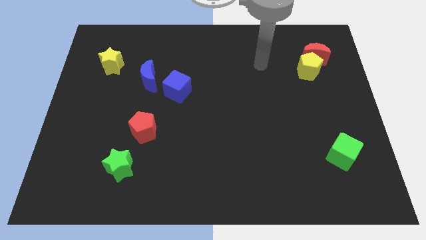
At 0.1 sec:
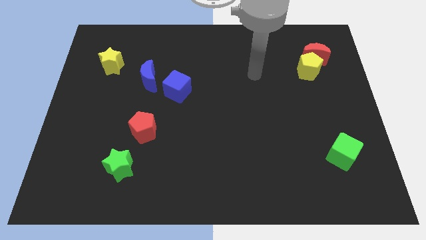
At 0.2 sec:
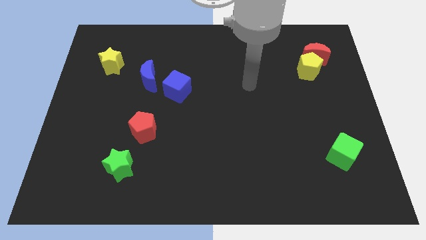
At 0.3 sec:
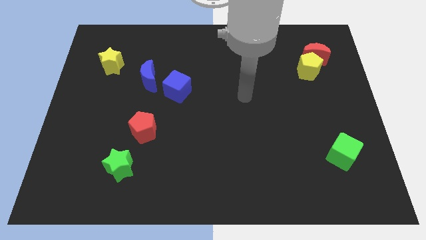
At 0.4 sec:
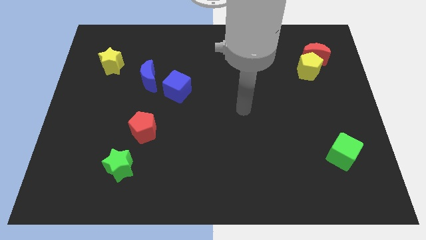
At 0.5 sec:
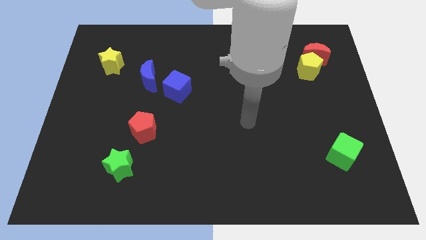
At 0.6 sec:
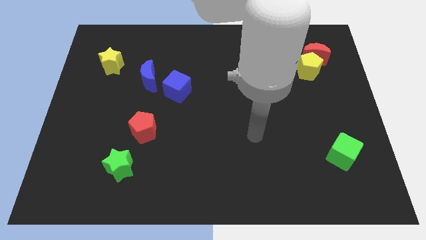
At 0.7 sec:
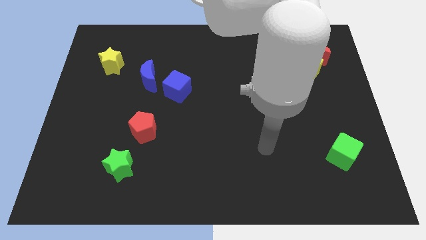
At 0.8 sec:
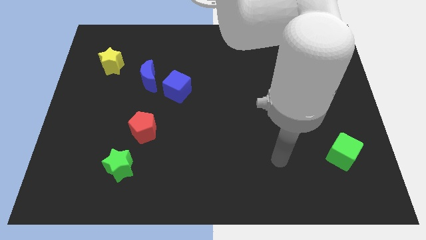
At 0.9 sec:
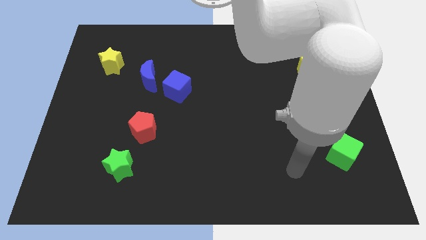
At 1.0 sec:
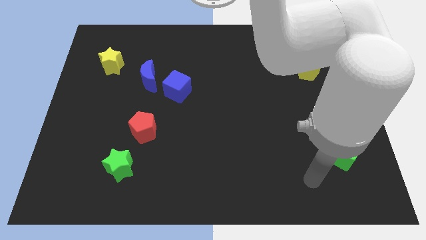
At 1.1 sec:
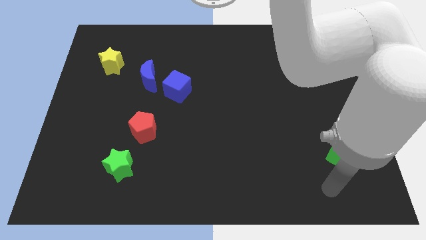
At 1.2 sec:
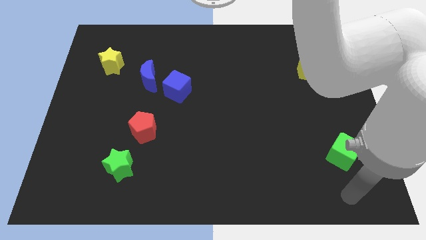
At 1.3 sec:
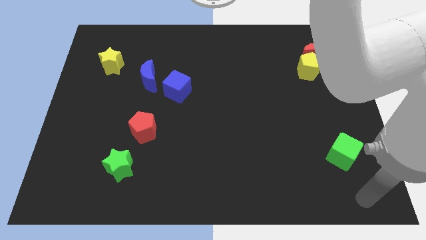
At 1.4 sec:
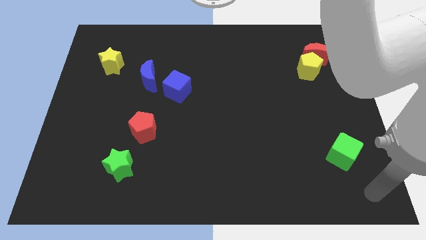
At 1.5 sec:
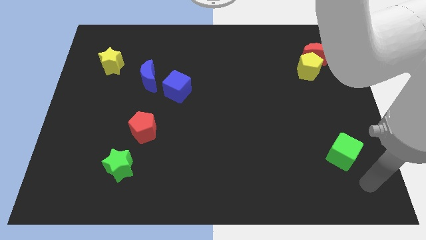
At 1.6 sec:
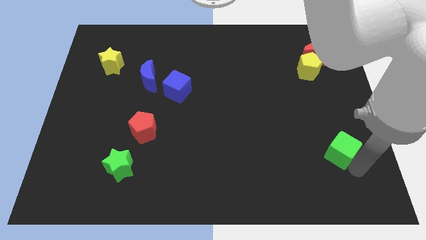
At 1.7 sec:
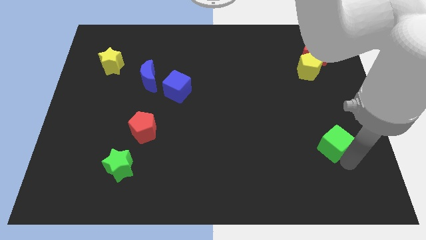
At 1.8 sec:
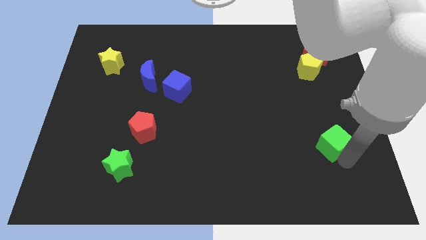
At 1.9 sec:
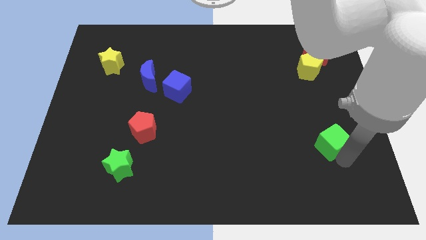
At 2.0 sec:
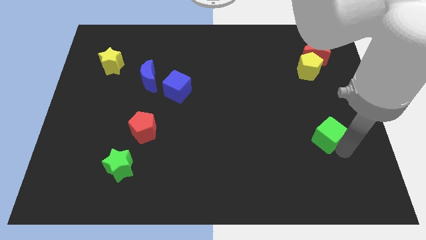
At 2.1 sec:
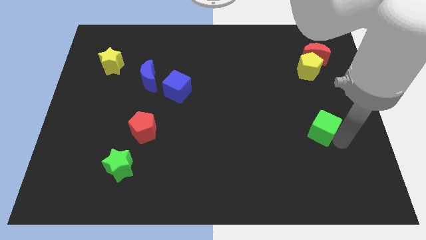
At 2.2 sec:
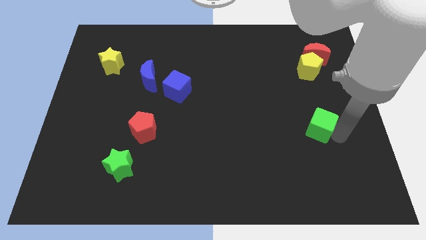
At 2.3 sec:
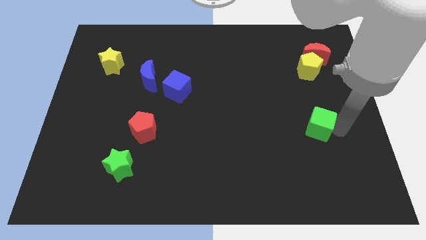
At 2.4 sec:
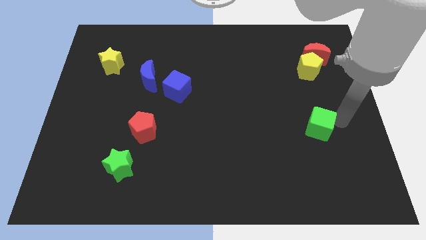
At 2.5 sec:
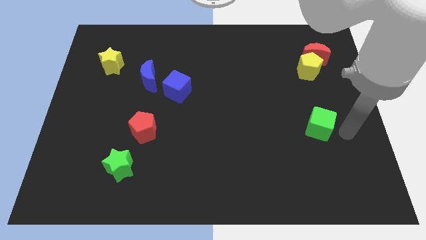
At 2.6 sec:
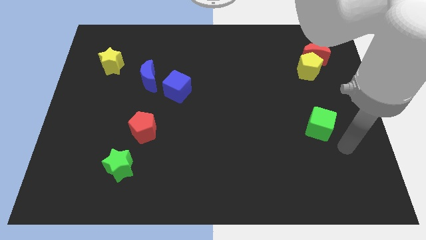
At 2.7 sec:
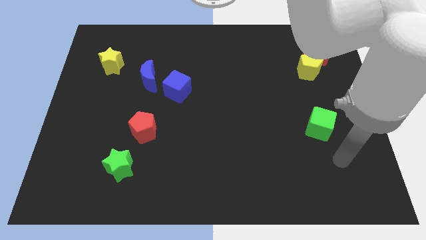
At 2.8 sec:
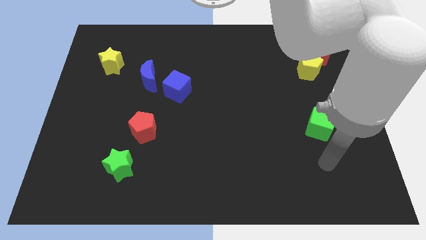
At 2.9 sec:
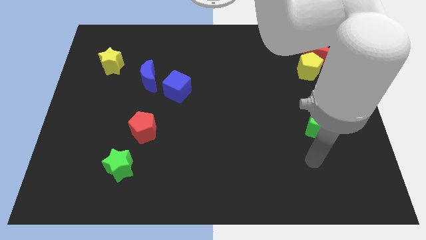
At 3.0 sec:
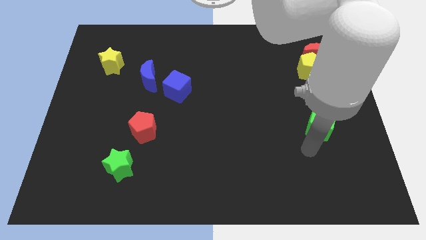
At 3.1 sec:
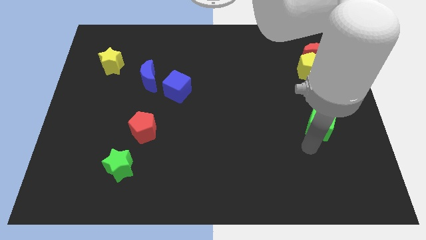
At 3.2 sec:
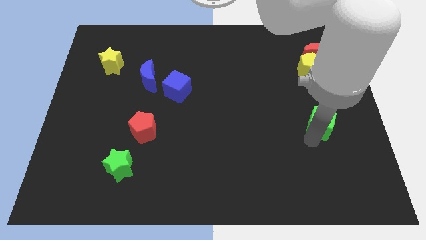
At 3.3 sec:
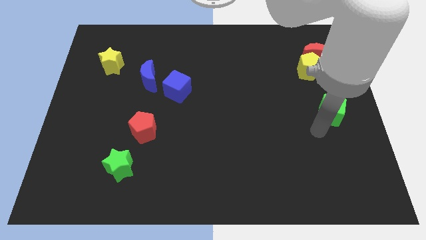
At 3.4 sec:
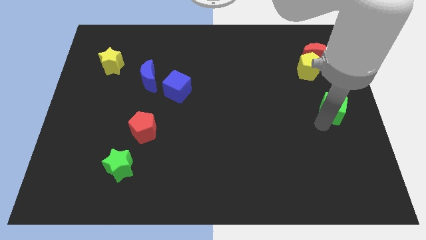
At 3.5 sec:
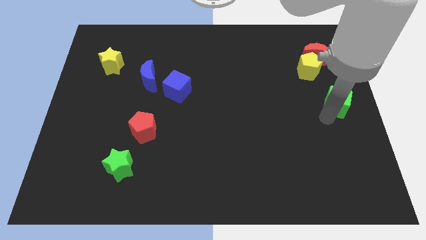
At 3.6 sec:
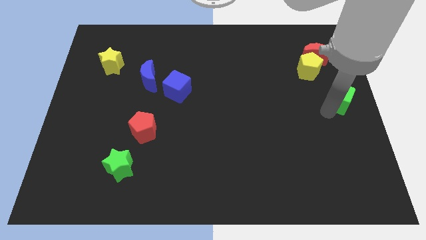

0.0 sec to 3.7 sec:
slide the green cube to the center right

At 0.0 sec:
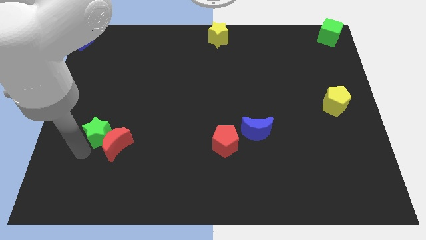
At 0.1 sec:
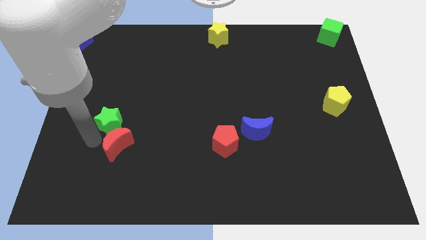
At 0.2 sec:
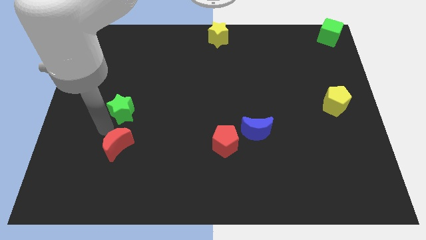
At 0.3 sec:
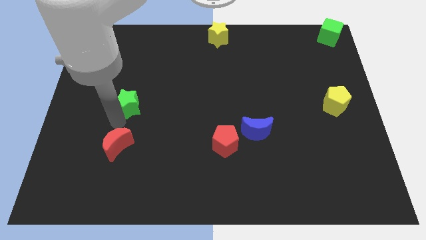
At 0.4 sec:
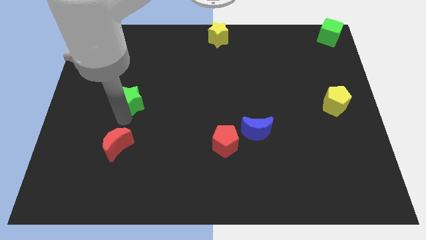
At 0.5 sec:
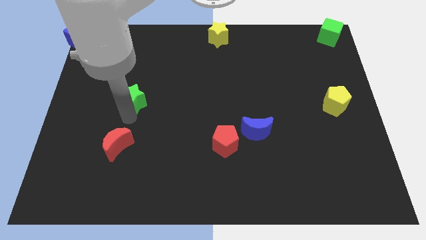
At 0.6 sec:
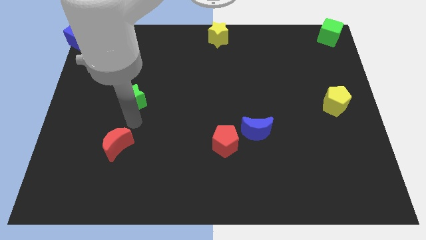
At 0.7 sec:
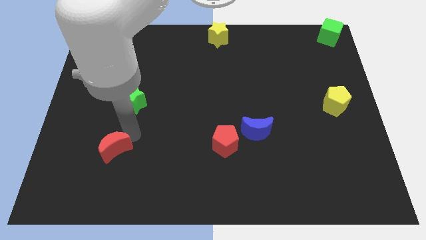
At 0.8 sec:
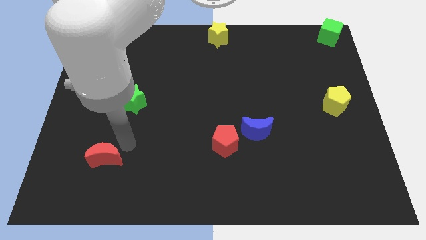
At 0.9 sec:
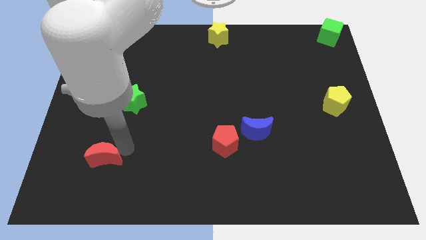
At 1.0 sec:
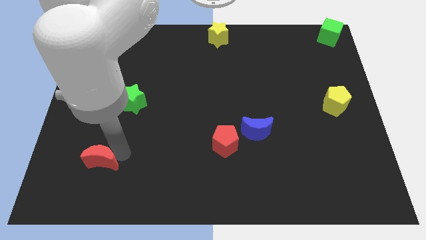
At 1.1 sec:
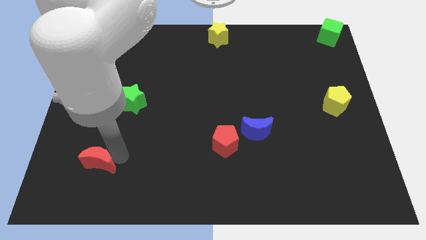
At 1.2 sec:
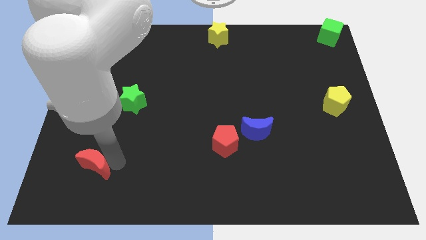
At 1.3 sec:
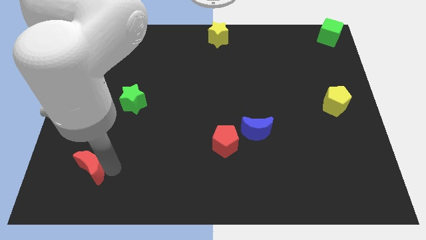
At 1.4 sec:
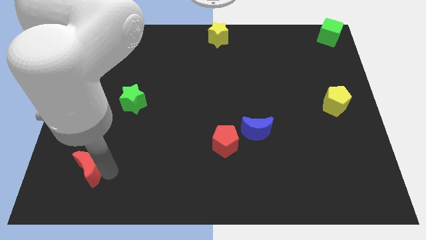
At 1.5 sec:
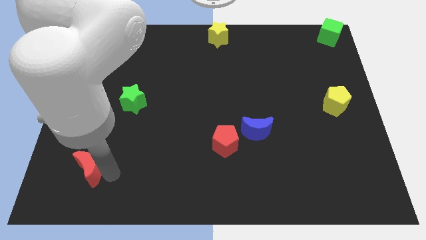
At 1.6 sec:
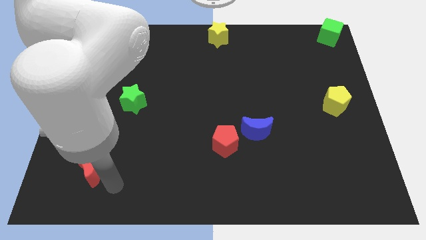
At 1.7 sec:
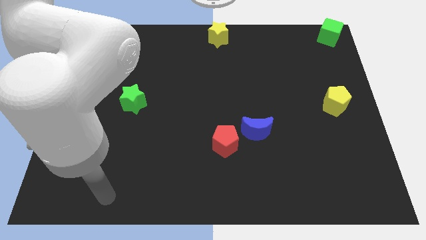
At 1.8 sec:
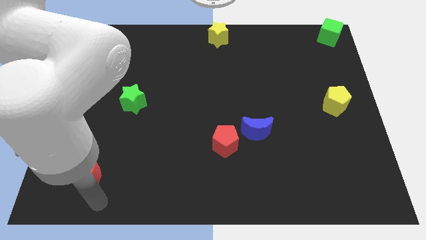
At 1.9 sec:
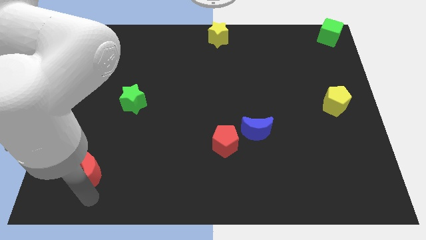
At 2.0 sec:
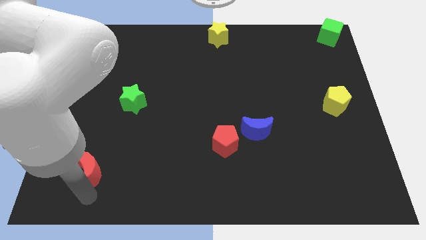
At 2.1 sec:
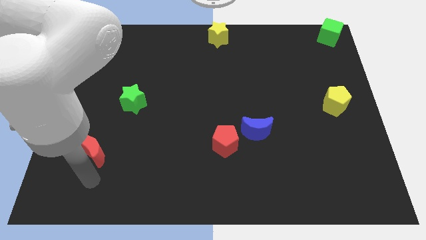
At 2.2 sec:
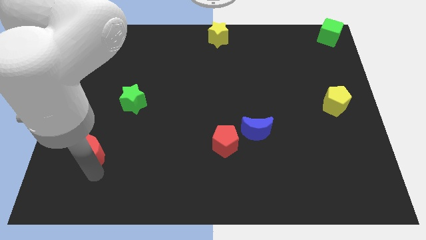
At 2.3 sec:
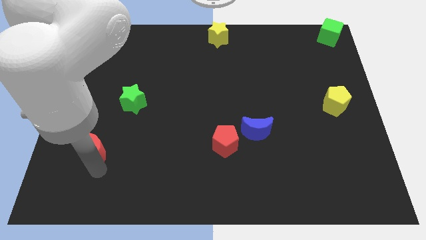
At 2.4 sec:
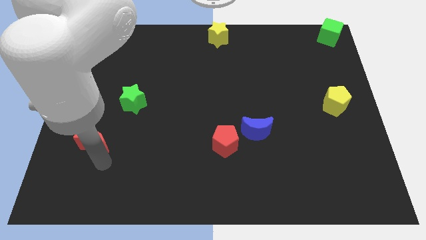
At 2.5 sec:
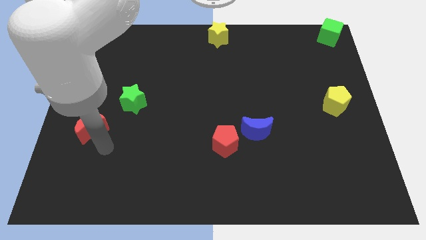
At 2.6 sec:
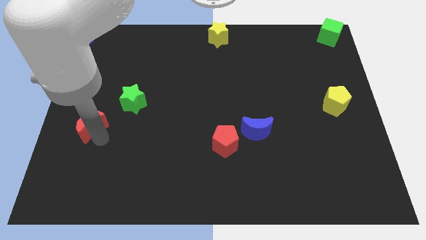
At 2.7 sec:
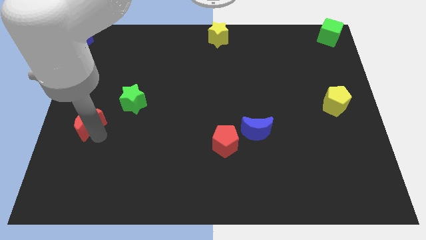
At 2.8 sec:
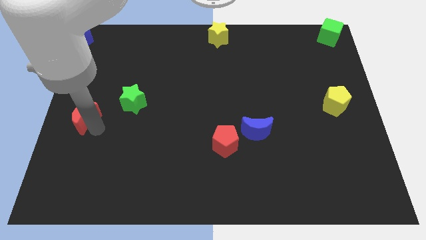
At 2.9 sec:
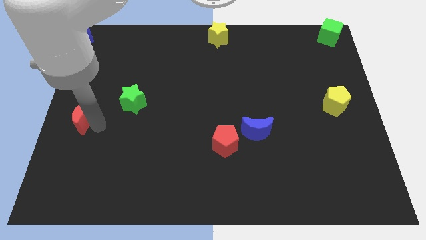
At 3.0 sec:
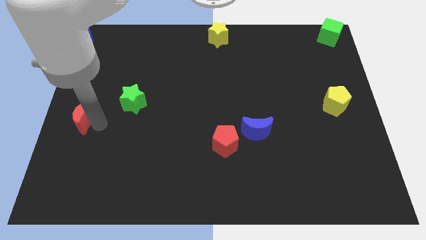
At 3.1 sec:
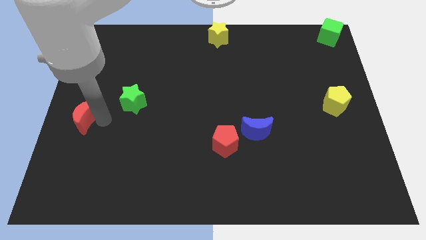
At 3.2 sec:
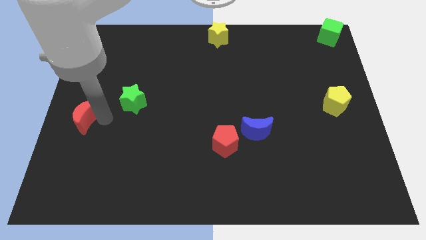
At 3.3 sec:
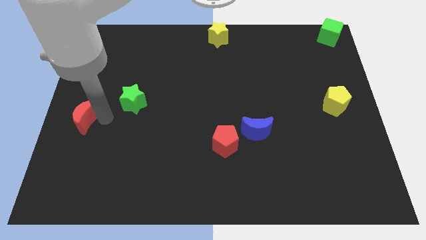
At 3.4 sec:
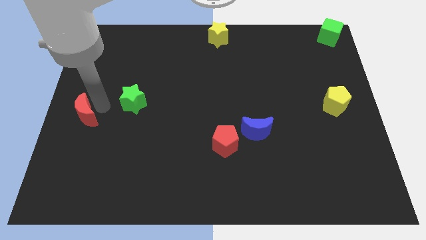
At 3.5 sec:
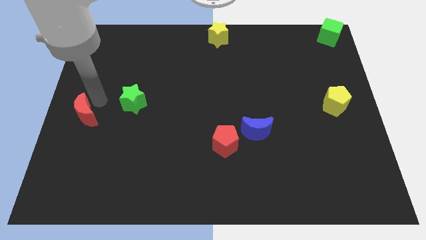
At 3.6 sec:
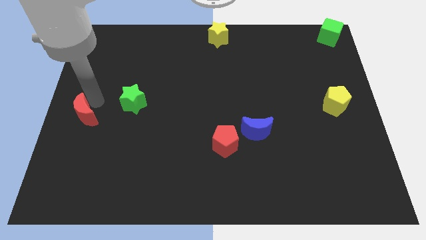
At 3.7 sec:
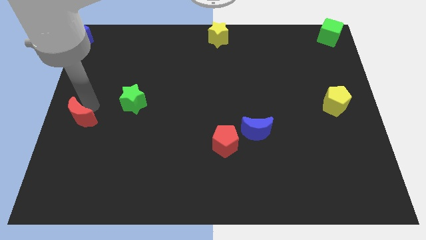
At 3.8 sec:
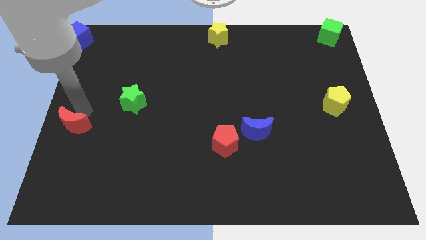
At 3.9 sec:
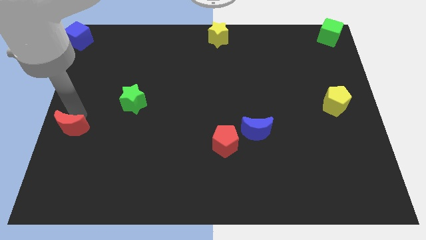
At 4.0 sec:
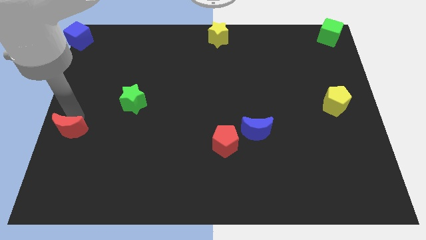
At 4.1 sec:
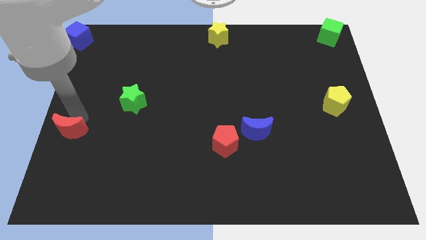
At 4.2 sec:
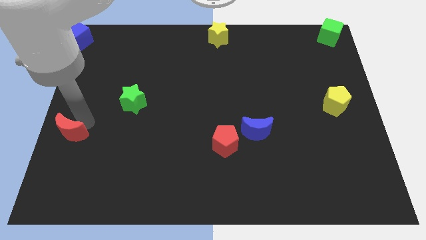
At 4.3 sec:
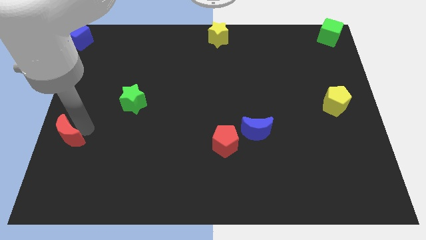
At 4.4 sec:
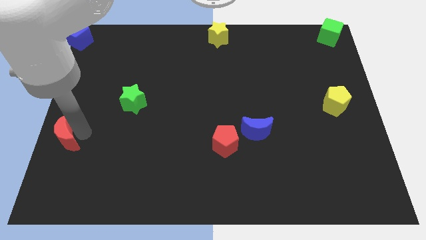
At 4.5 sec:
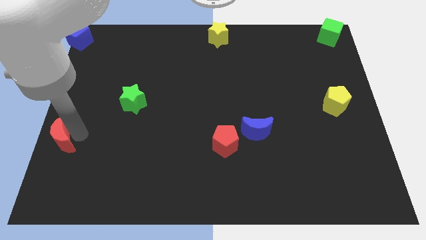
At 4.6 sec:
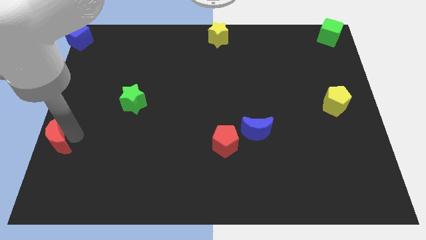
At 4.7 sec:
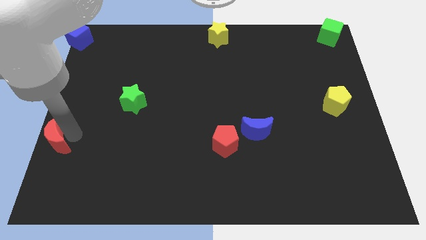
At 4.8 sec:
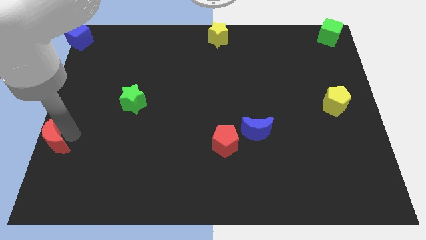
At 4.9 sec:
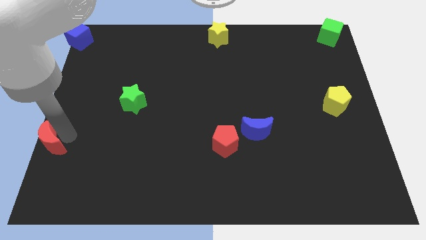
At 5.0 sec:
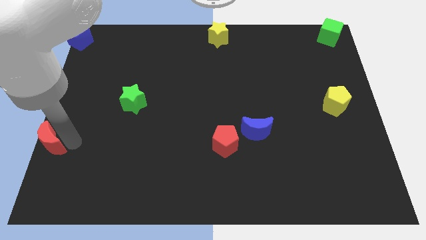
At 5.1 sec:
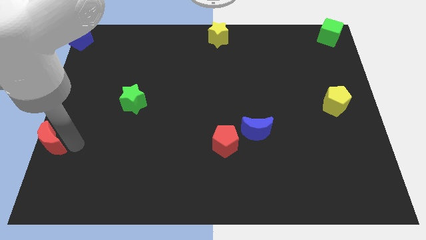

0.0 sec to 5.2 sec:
slide the red moon to the left side of the board
